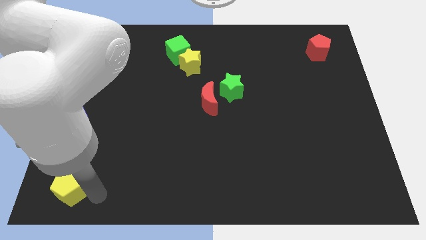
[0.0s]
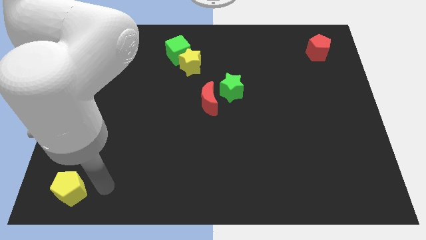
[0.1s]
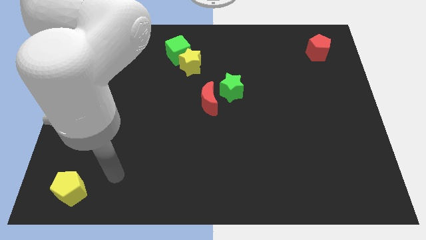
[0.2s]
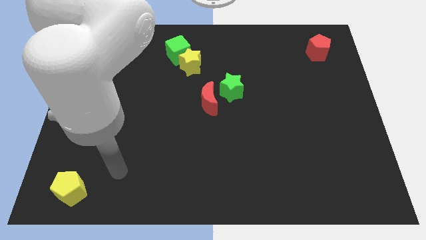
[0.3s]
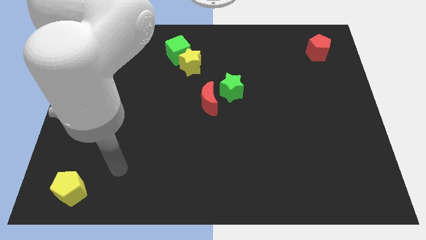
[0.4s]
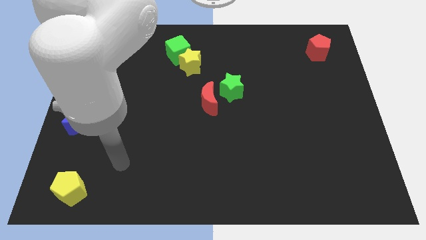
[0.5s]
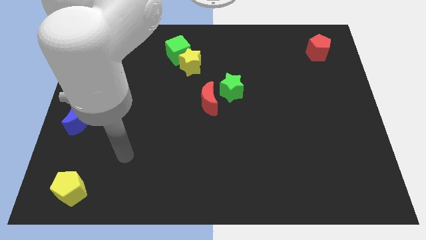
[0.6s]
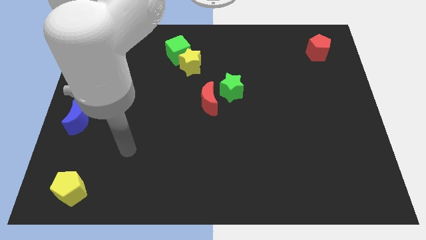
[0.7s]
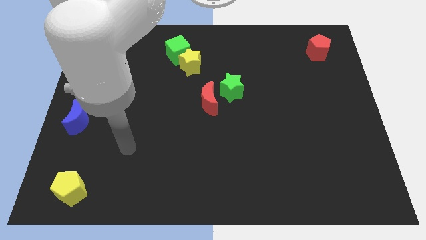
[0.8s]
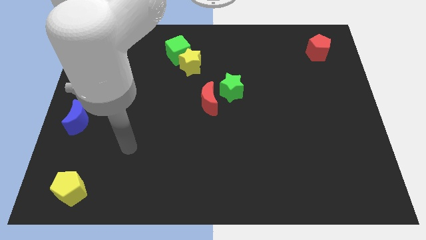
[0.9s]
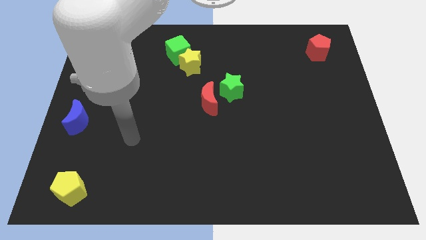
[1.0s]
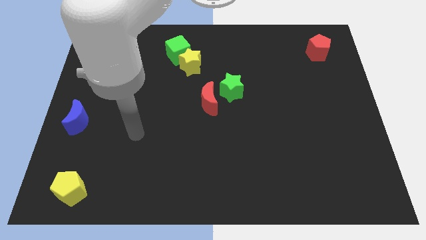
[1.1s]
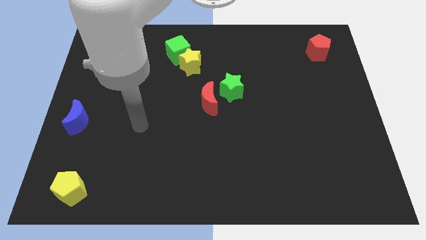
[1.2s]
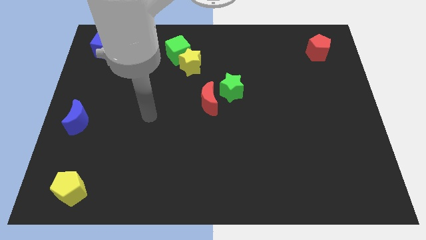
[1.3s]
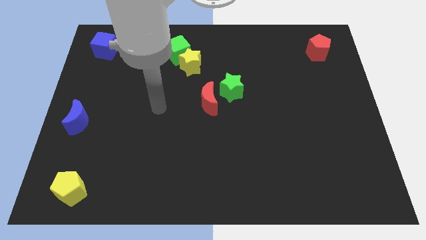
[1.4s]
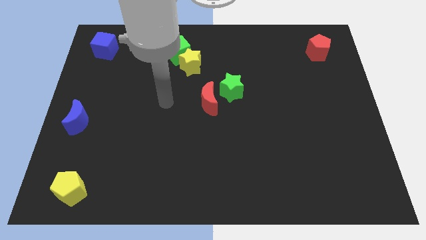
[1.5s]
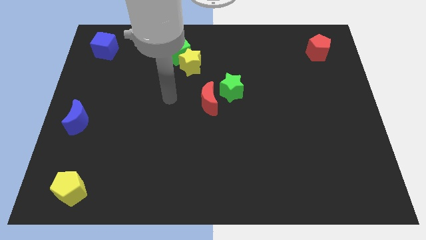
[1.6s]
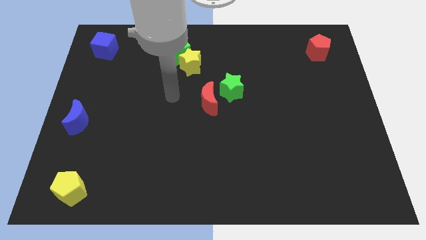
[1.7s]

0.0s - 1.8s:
move yourself away from the yellow pentagon

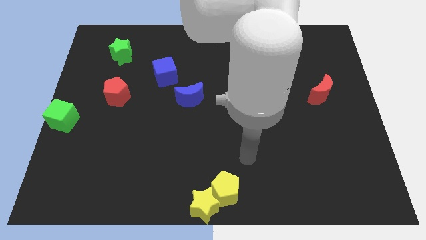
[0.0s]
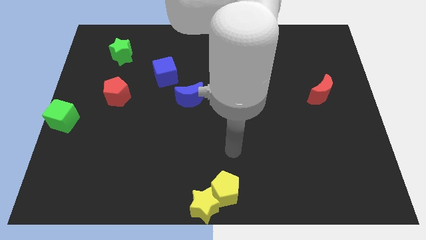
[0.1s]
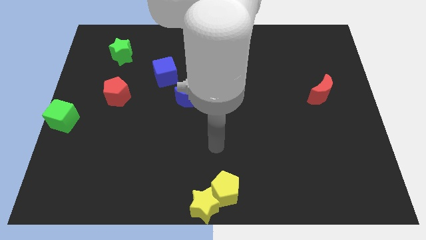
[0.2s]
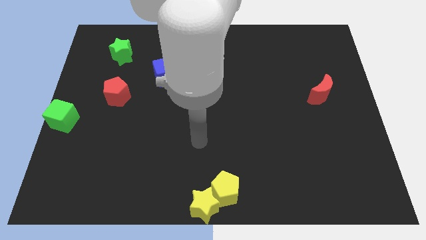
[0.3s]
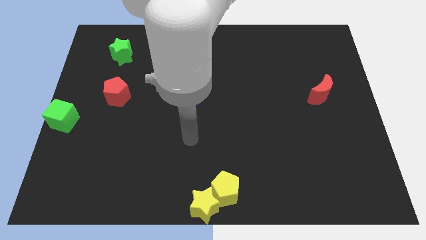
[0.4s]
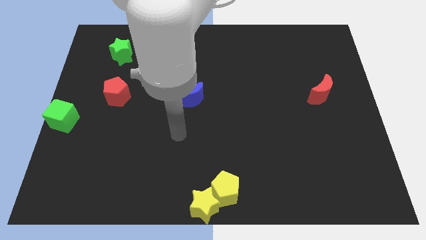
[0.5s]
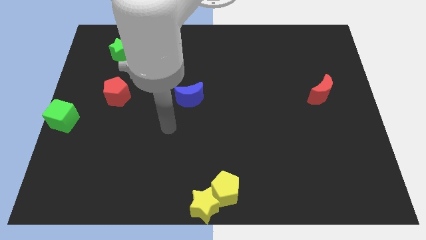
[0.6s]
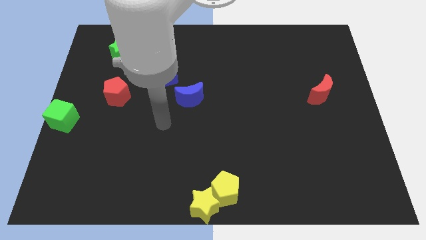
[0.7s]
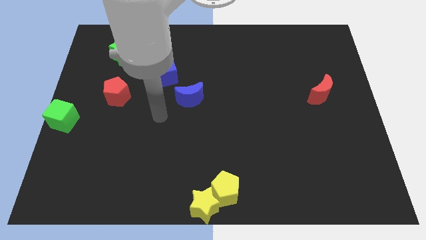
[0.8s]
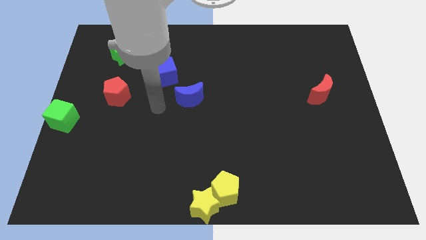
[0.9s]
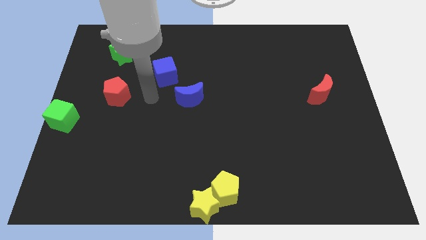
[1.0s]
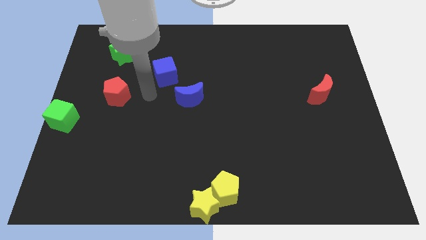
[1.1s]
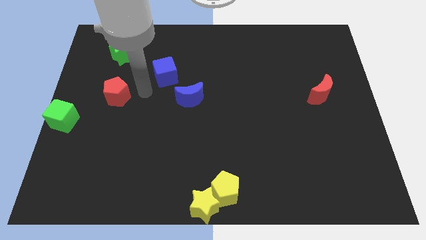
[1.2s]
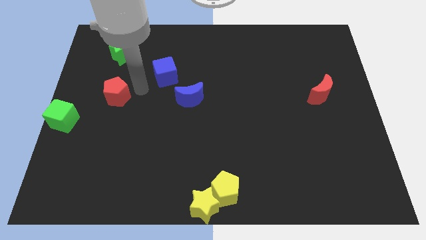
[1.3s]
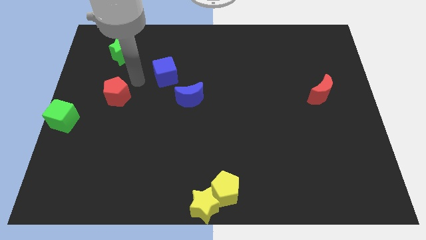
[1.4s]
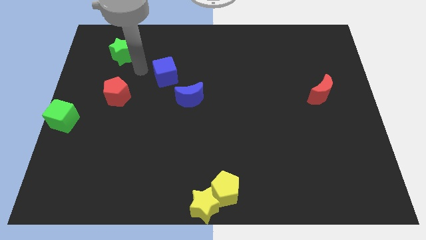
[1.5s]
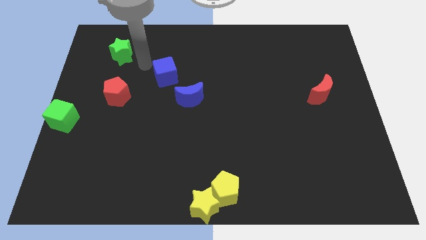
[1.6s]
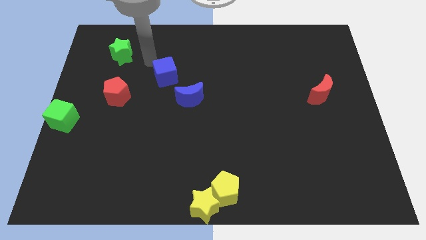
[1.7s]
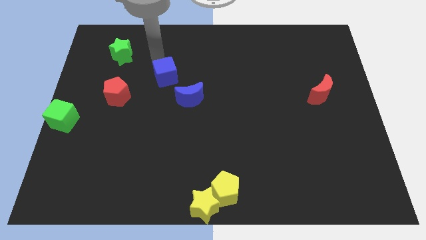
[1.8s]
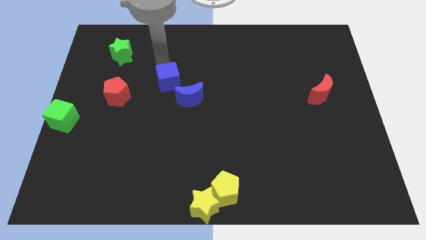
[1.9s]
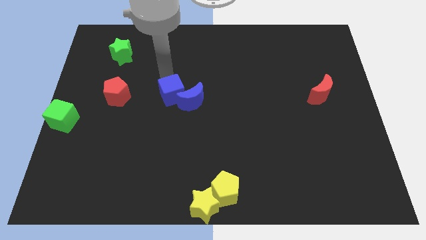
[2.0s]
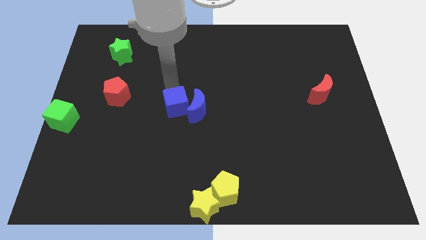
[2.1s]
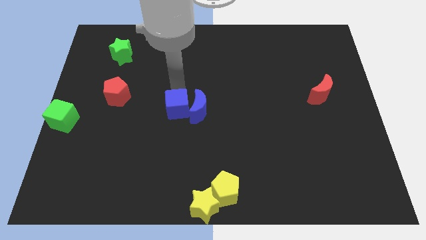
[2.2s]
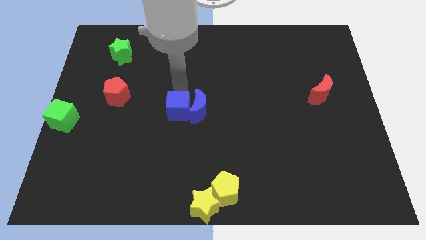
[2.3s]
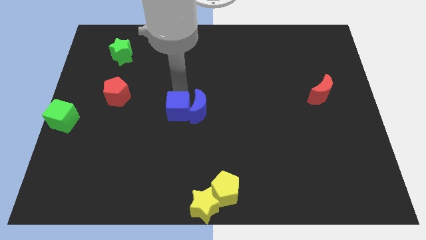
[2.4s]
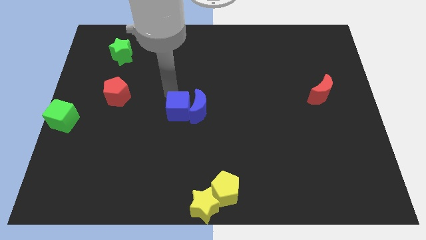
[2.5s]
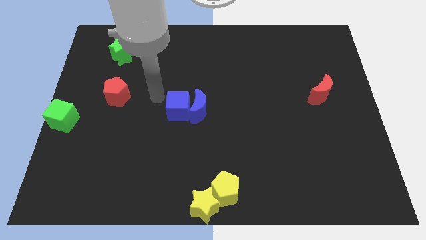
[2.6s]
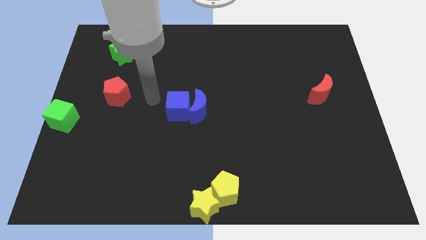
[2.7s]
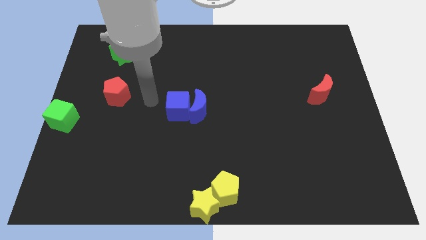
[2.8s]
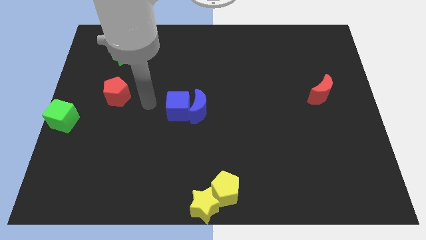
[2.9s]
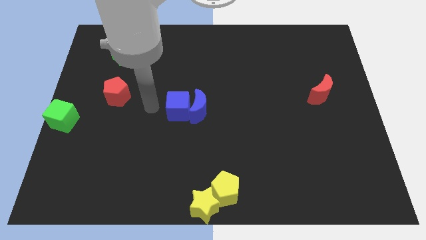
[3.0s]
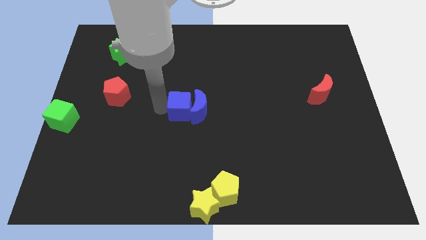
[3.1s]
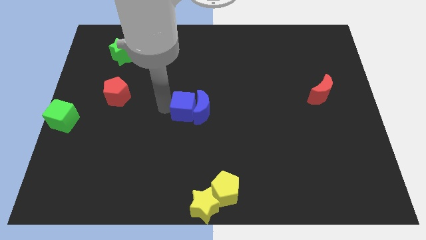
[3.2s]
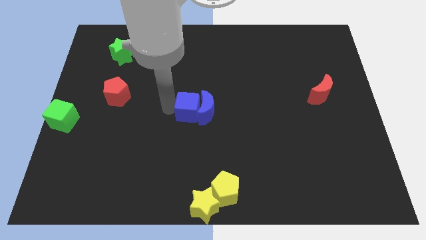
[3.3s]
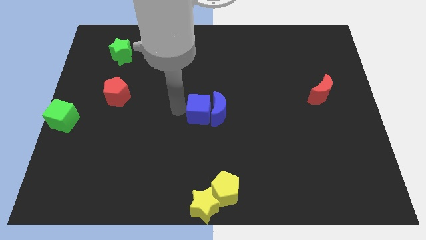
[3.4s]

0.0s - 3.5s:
slide the blue blocks to the center of the board

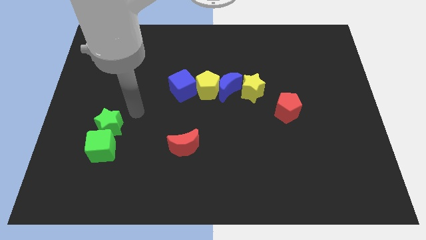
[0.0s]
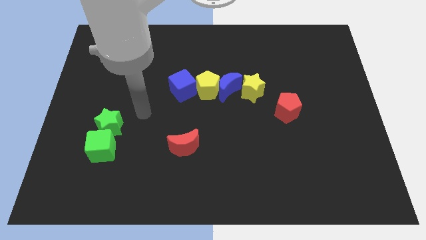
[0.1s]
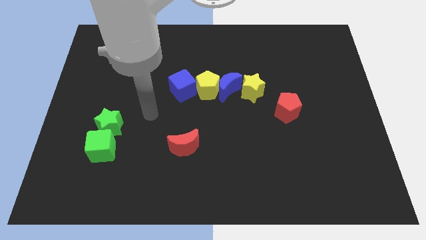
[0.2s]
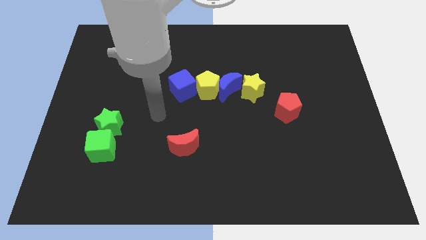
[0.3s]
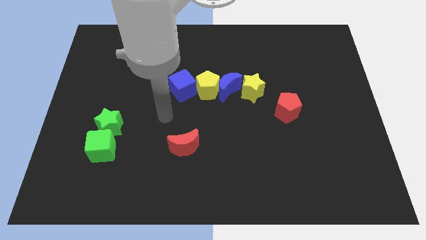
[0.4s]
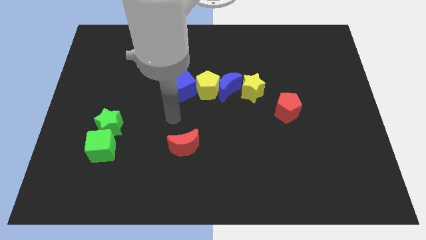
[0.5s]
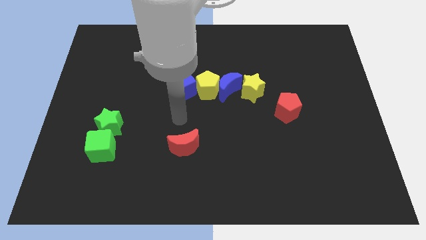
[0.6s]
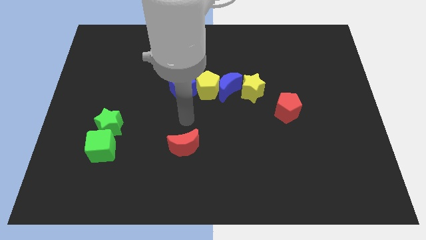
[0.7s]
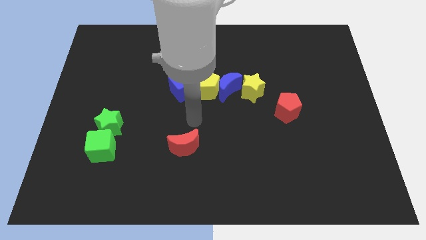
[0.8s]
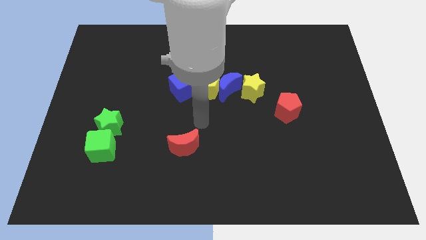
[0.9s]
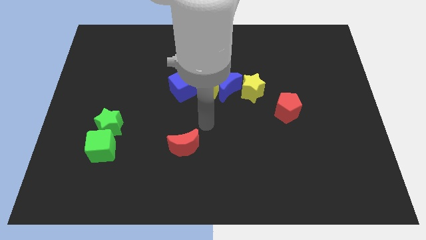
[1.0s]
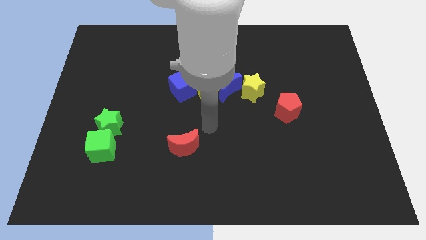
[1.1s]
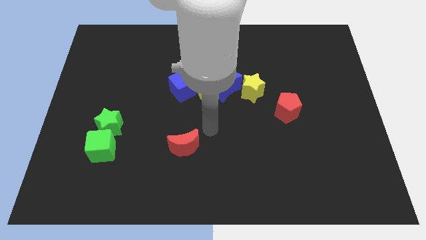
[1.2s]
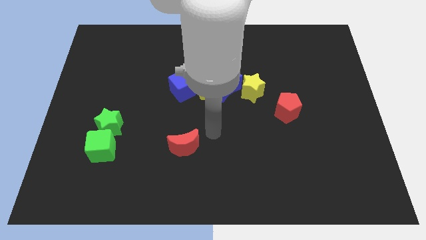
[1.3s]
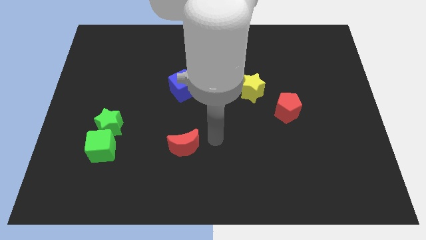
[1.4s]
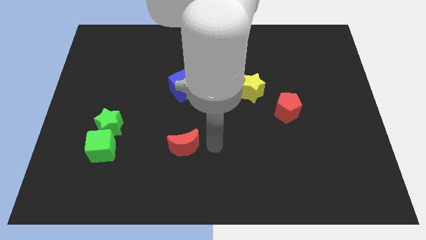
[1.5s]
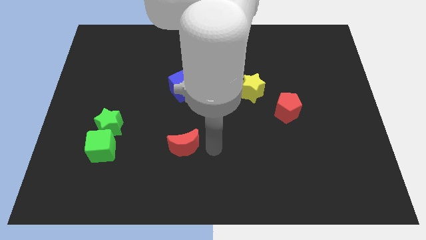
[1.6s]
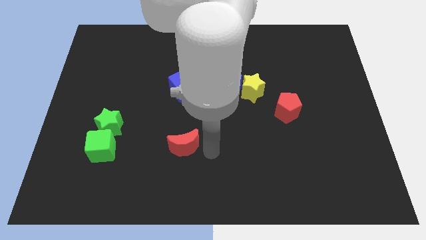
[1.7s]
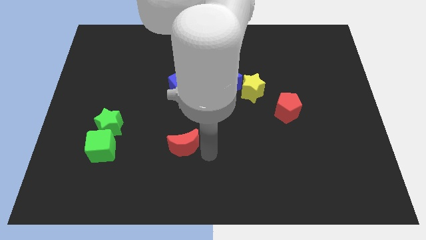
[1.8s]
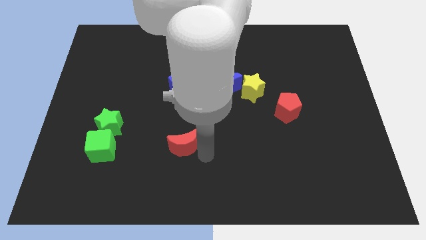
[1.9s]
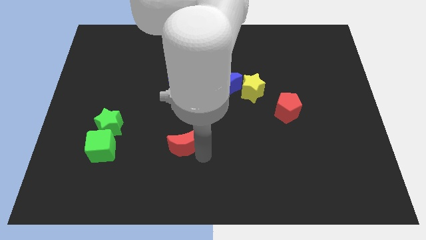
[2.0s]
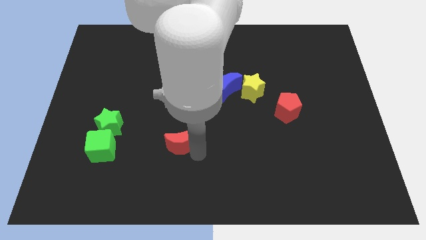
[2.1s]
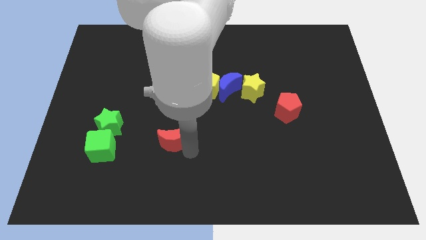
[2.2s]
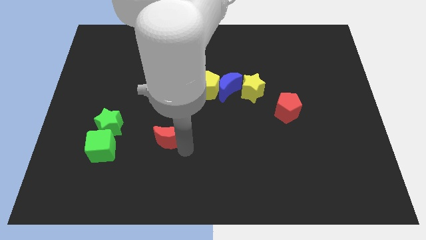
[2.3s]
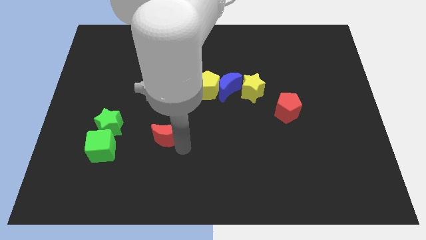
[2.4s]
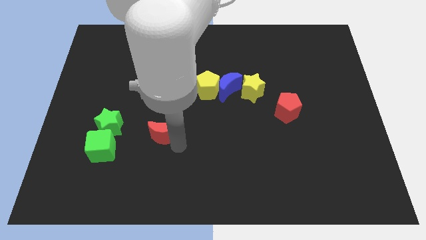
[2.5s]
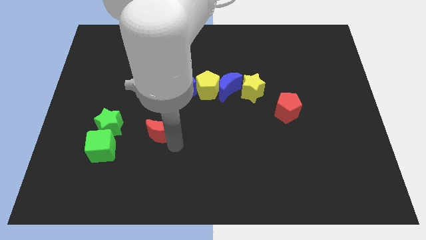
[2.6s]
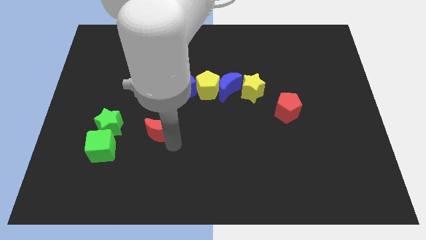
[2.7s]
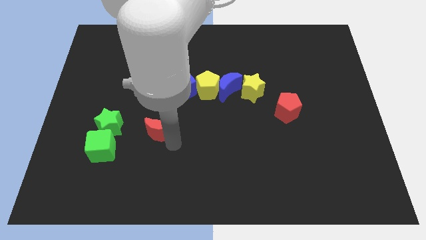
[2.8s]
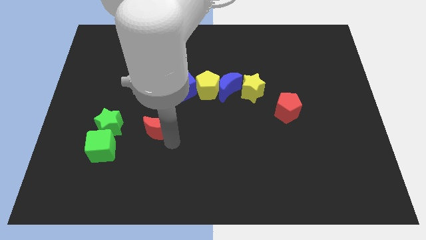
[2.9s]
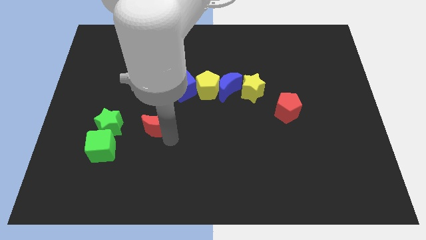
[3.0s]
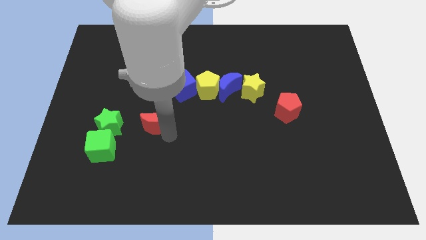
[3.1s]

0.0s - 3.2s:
place red crescent to the right side of the green star

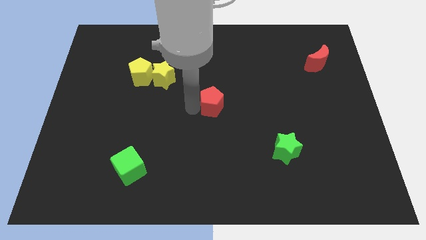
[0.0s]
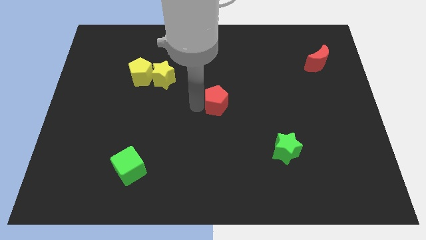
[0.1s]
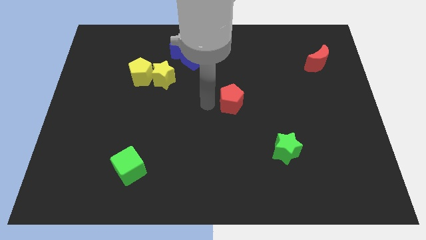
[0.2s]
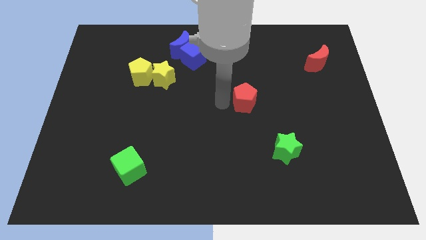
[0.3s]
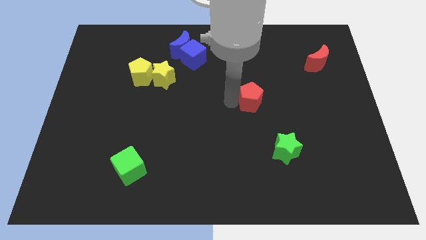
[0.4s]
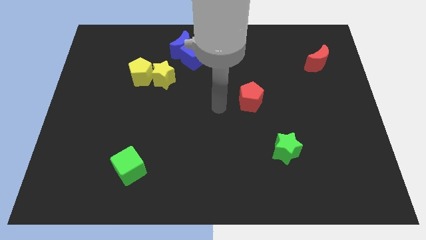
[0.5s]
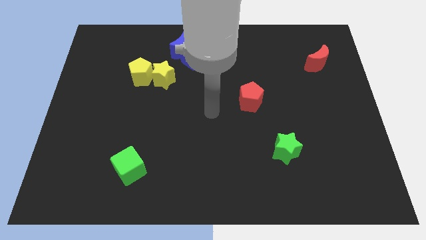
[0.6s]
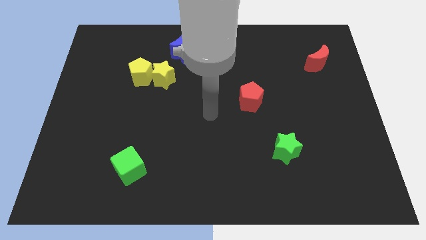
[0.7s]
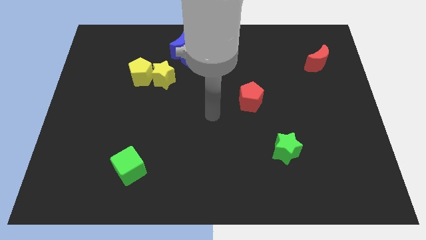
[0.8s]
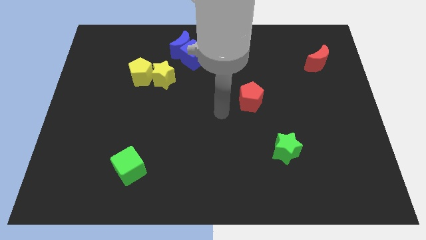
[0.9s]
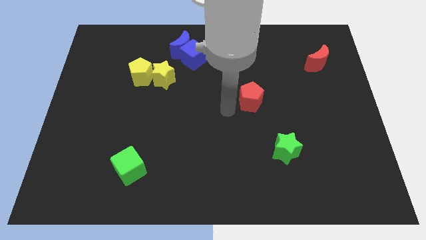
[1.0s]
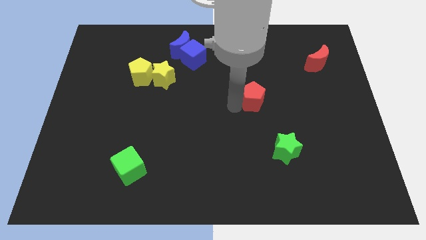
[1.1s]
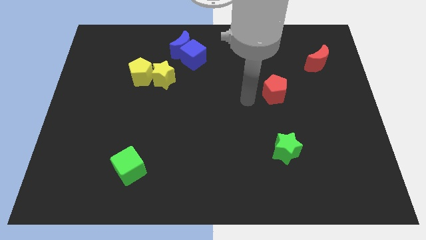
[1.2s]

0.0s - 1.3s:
slightly push the red pentagon to the right side
